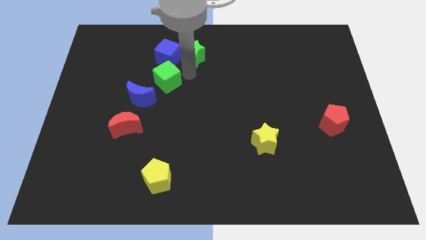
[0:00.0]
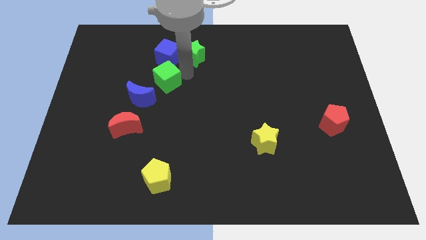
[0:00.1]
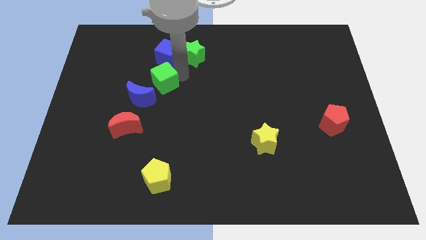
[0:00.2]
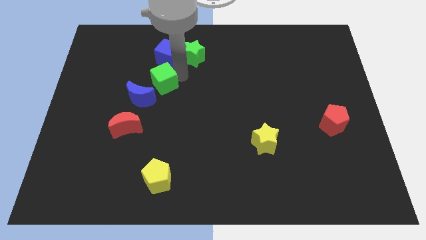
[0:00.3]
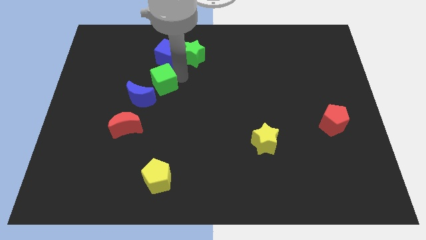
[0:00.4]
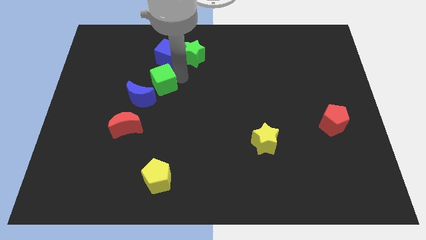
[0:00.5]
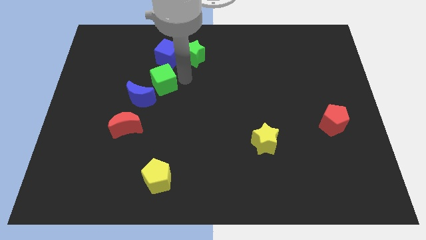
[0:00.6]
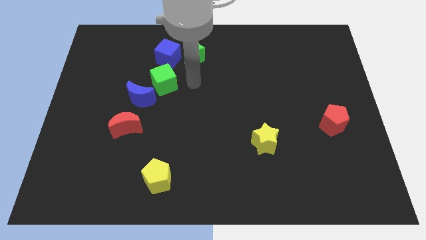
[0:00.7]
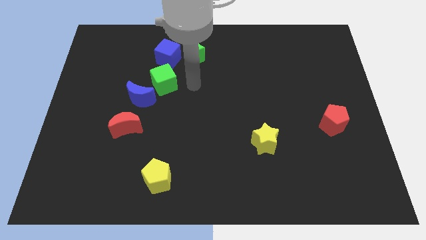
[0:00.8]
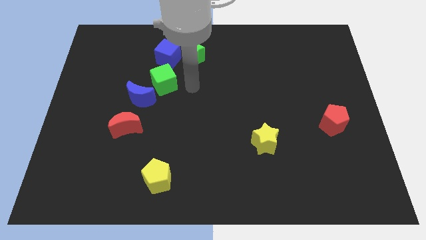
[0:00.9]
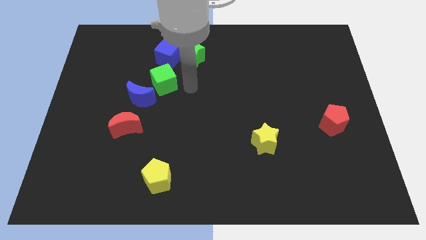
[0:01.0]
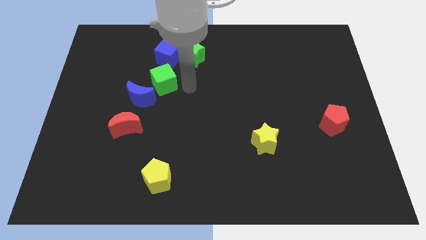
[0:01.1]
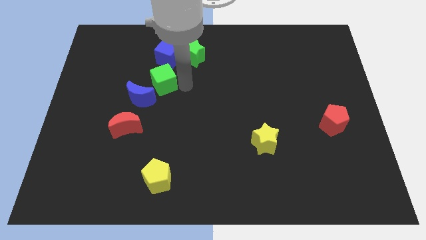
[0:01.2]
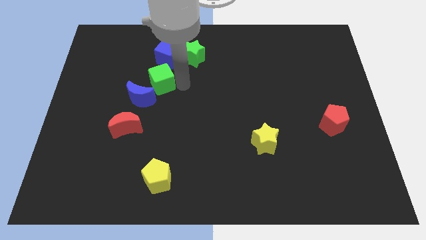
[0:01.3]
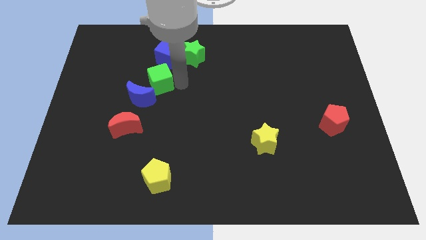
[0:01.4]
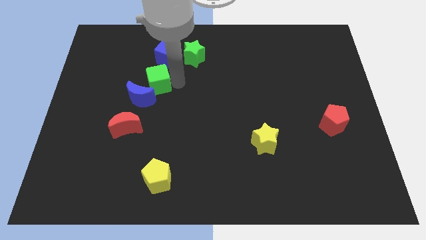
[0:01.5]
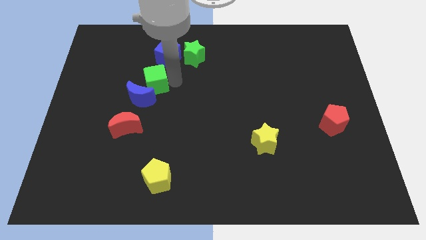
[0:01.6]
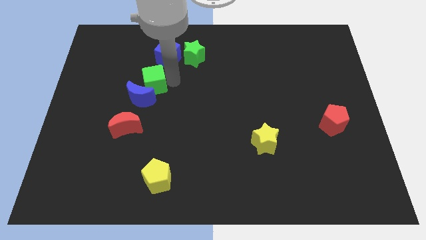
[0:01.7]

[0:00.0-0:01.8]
place the green cube below the blue cube

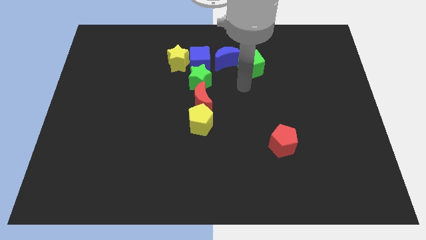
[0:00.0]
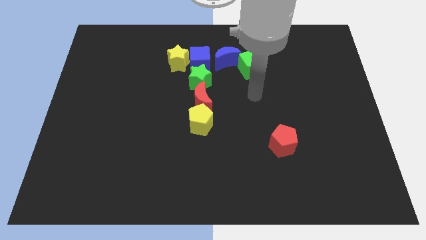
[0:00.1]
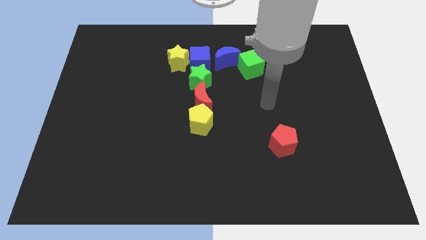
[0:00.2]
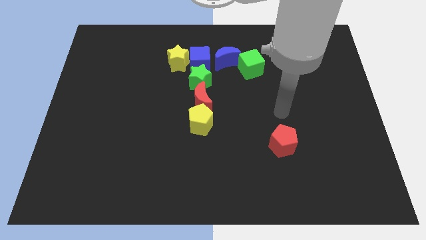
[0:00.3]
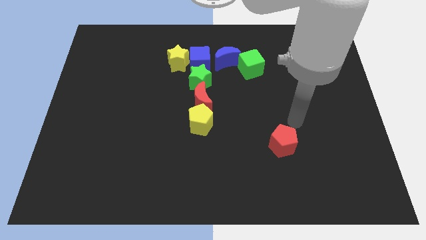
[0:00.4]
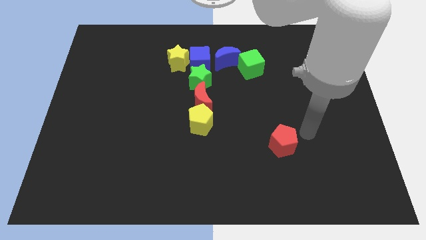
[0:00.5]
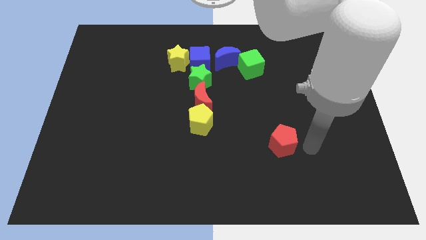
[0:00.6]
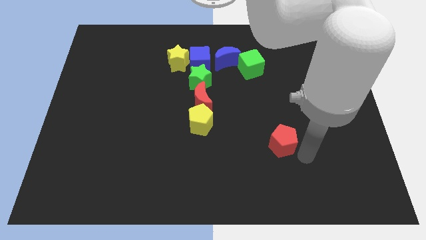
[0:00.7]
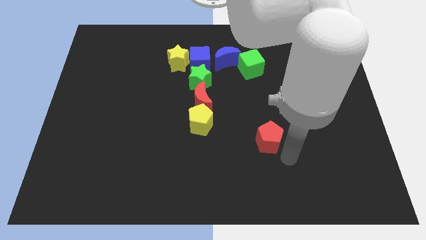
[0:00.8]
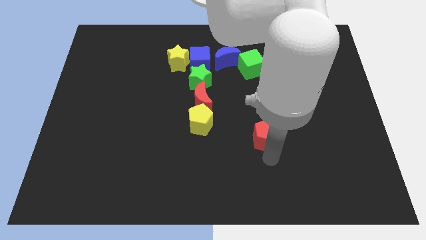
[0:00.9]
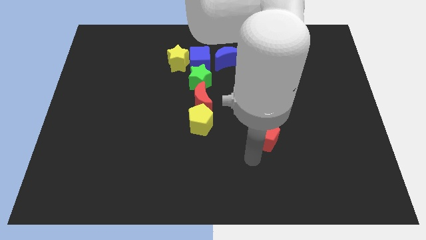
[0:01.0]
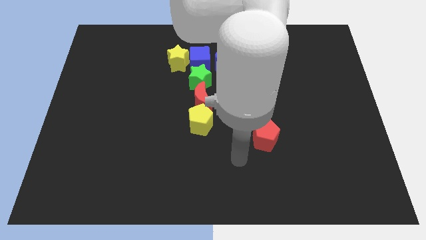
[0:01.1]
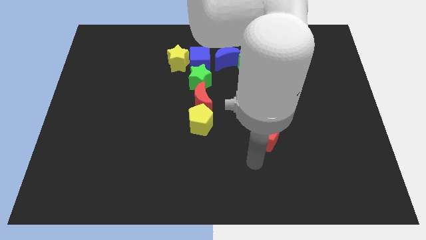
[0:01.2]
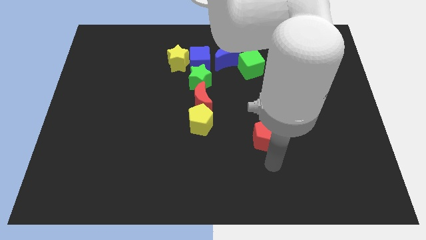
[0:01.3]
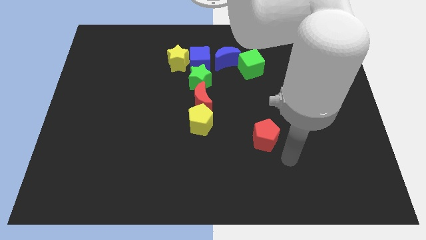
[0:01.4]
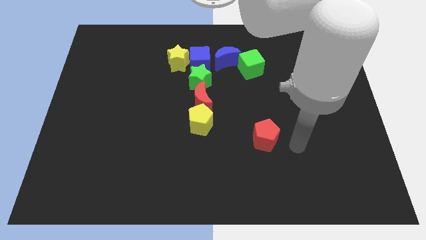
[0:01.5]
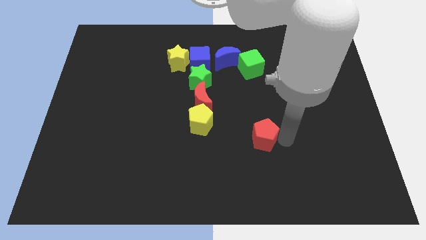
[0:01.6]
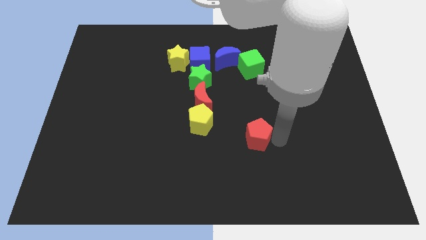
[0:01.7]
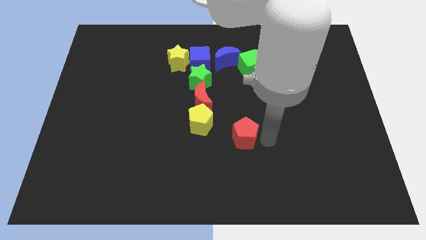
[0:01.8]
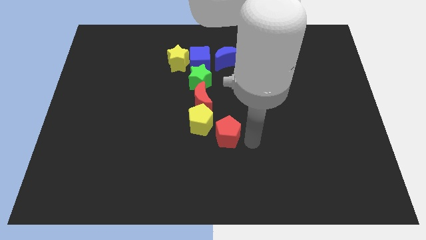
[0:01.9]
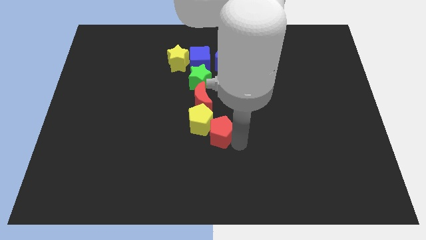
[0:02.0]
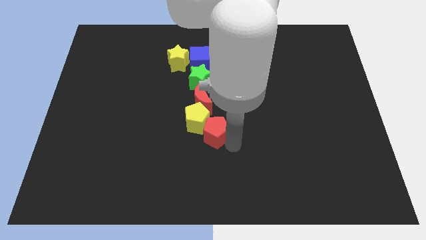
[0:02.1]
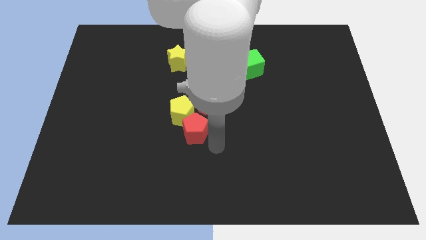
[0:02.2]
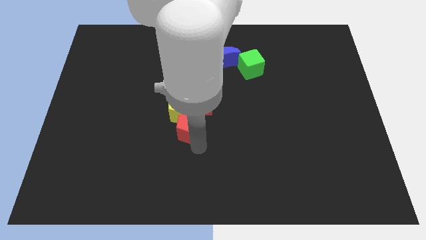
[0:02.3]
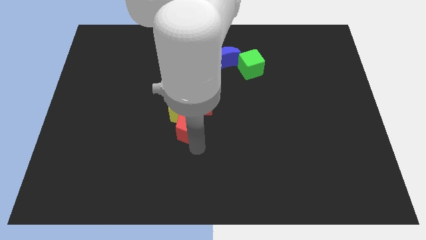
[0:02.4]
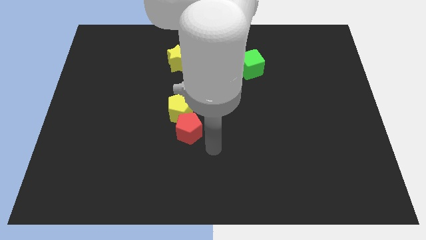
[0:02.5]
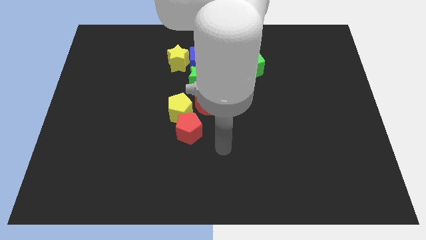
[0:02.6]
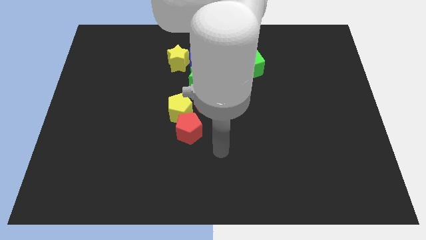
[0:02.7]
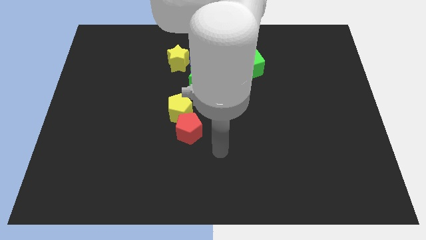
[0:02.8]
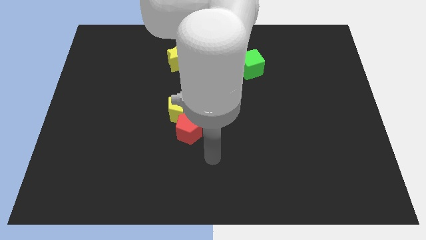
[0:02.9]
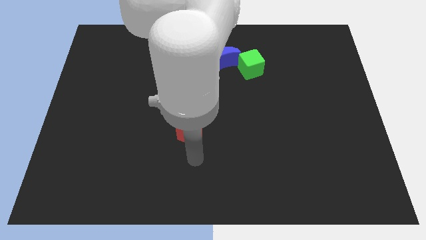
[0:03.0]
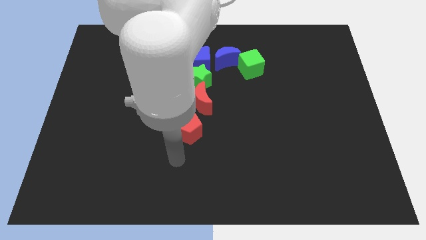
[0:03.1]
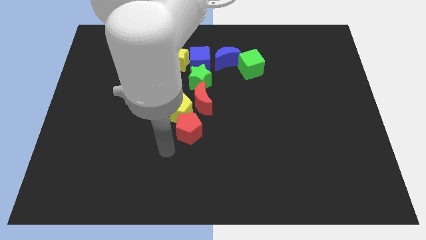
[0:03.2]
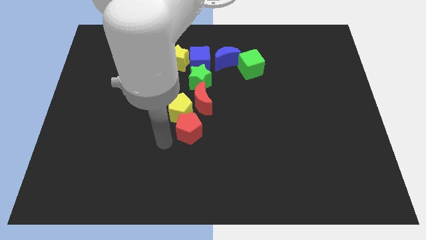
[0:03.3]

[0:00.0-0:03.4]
push the red pentagon below the yellow pentagon

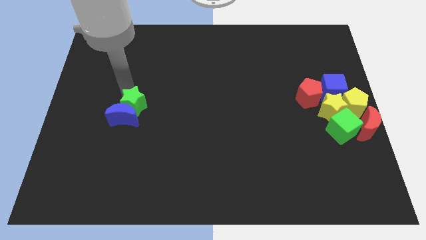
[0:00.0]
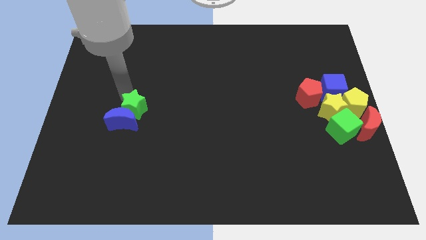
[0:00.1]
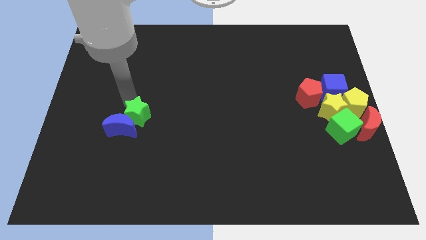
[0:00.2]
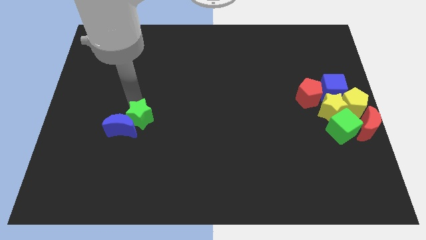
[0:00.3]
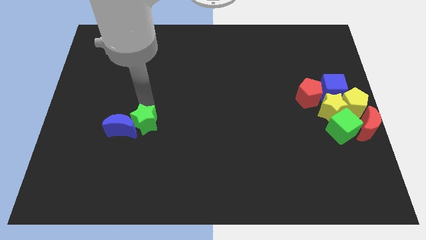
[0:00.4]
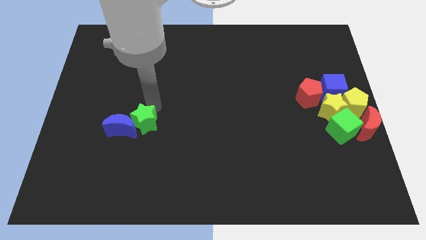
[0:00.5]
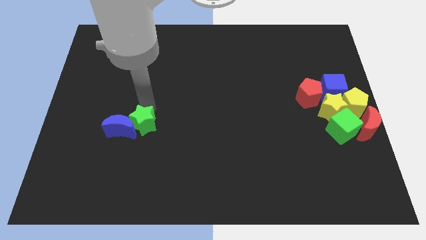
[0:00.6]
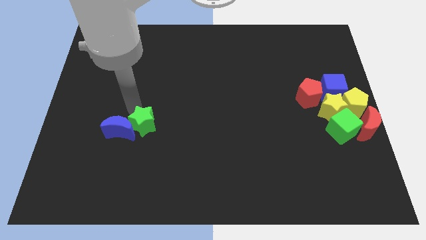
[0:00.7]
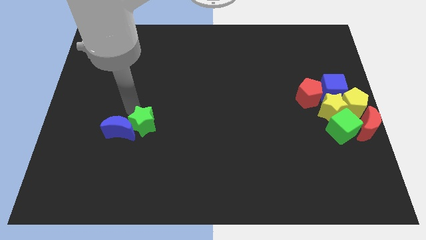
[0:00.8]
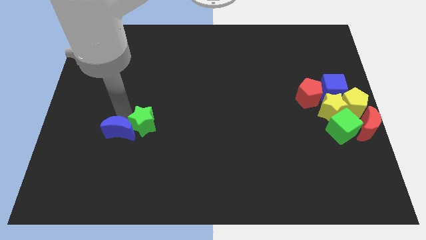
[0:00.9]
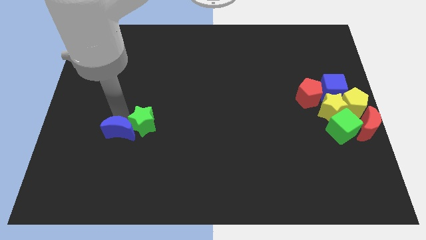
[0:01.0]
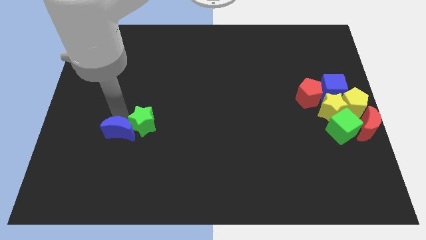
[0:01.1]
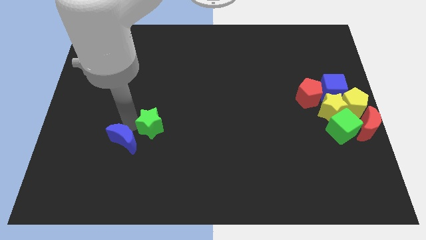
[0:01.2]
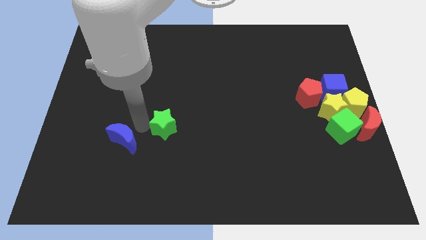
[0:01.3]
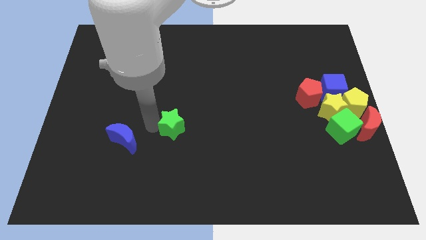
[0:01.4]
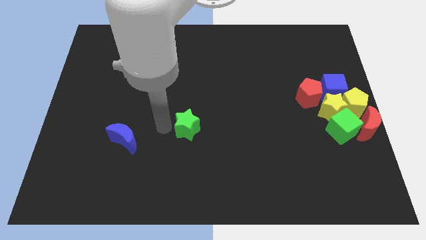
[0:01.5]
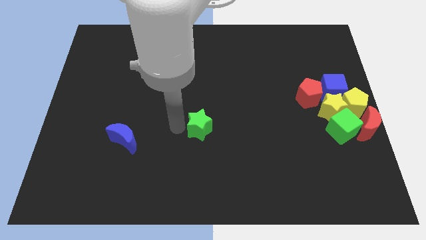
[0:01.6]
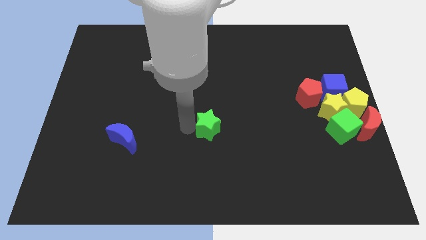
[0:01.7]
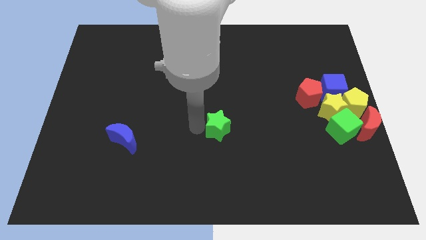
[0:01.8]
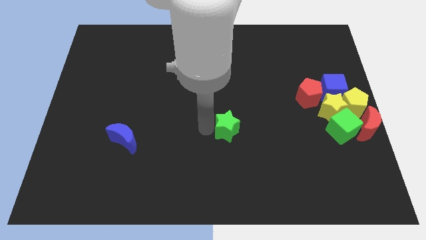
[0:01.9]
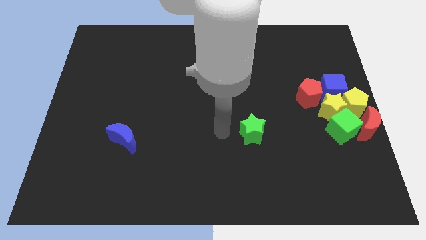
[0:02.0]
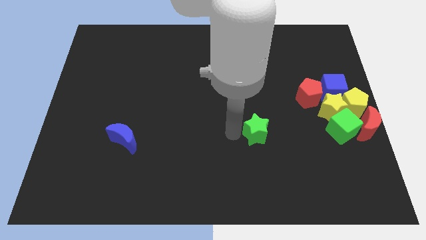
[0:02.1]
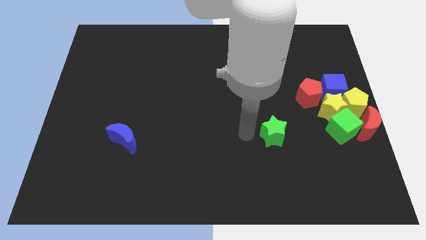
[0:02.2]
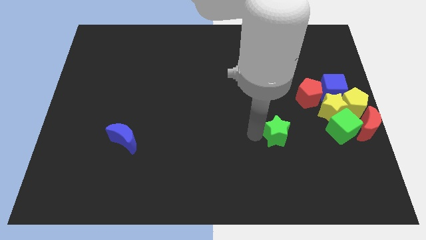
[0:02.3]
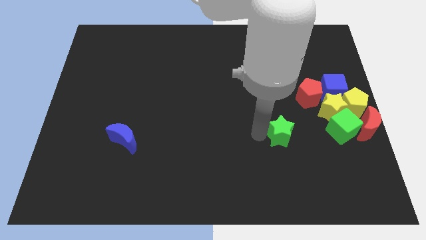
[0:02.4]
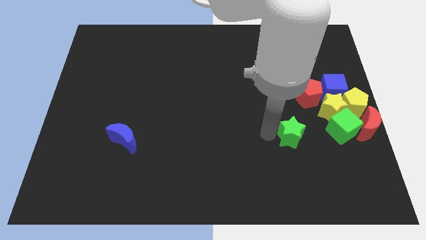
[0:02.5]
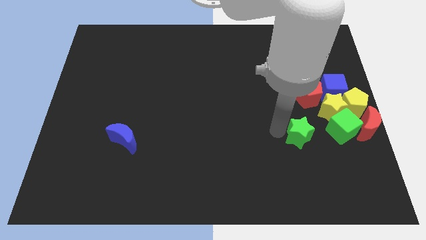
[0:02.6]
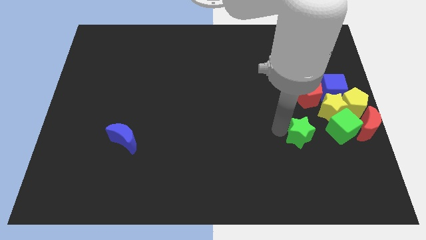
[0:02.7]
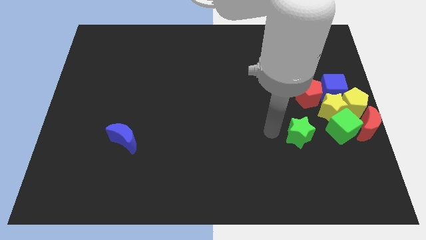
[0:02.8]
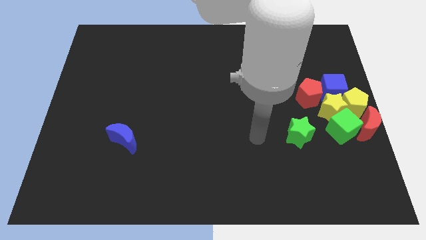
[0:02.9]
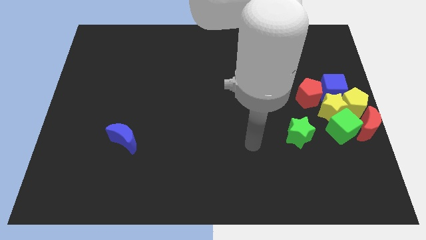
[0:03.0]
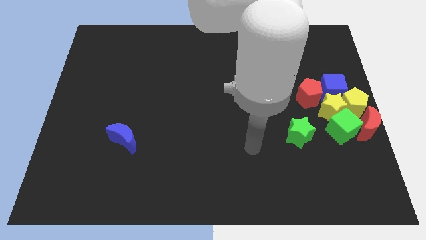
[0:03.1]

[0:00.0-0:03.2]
separate the green star from the blue moon

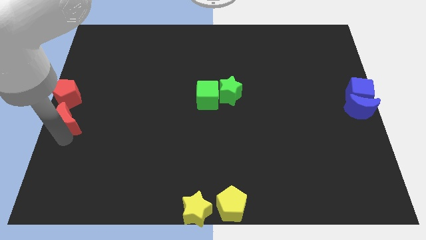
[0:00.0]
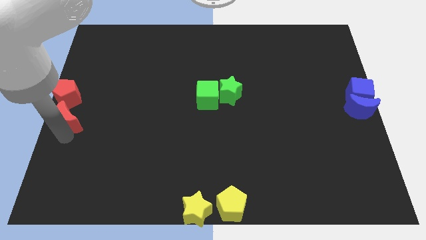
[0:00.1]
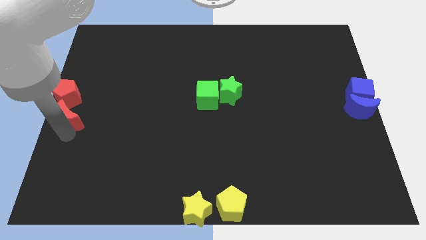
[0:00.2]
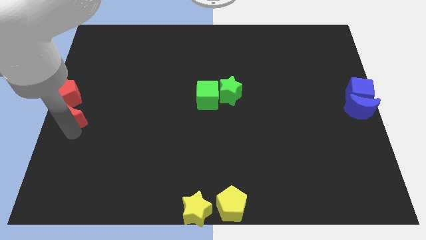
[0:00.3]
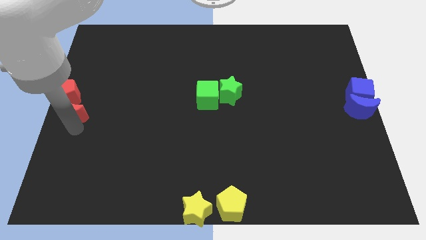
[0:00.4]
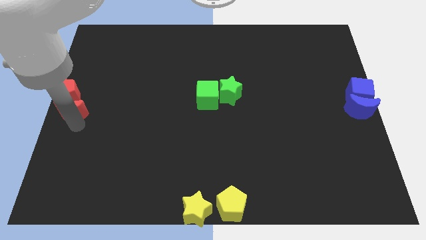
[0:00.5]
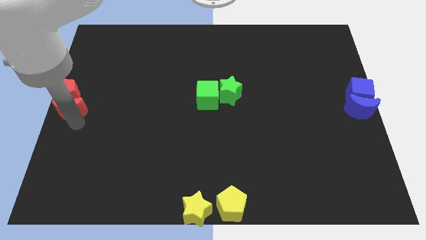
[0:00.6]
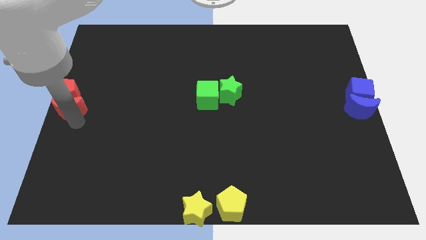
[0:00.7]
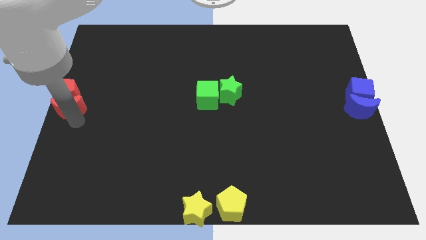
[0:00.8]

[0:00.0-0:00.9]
push the red crescent to the bottom of the red pentagon
